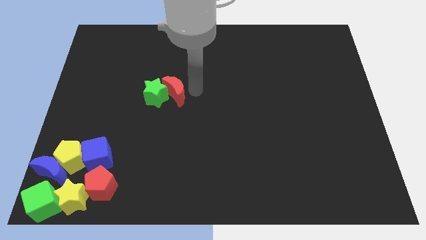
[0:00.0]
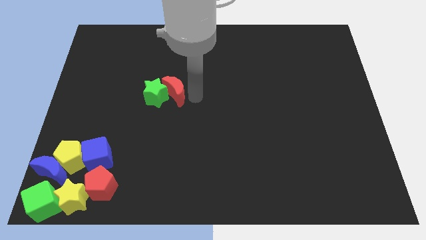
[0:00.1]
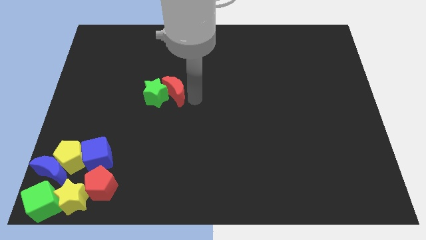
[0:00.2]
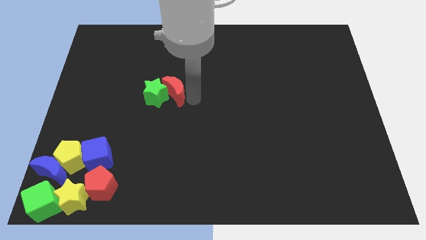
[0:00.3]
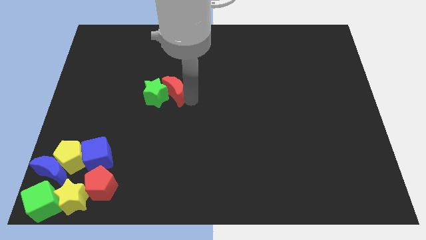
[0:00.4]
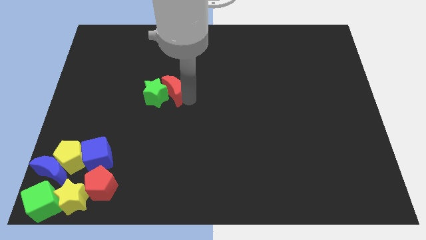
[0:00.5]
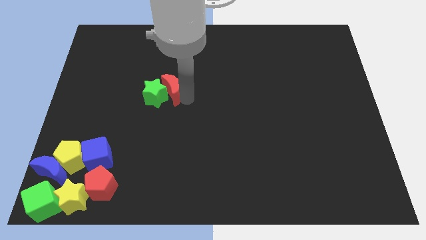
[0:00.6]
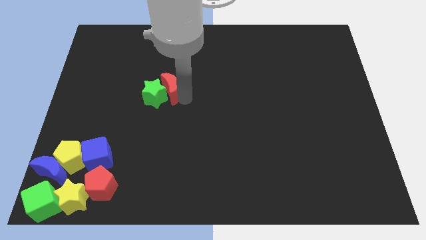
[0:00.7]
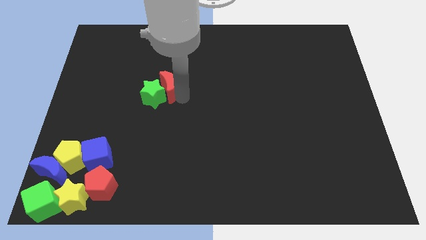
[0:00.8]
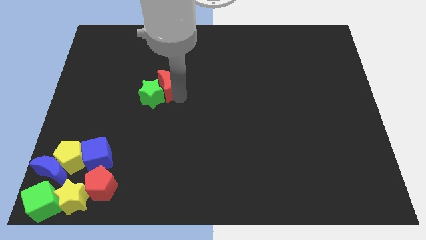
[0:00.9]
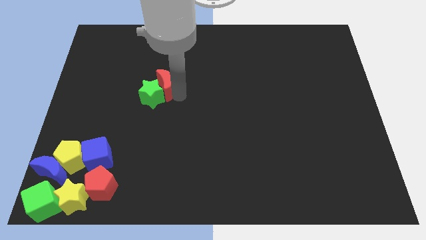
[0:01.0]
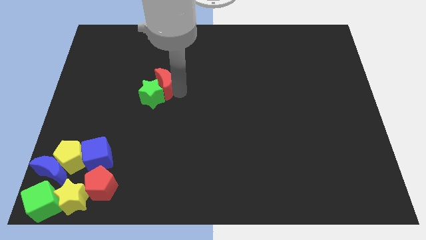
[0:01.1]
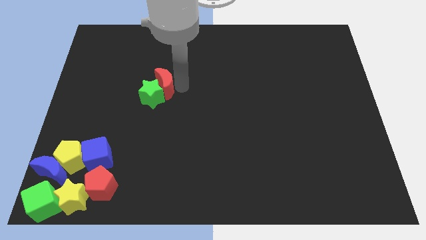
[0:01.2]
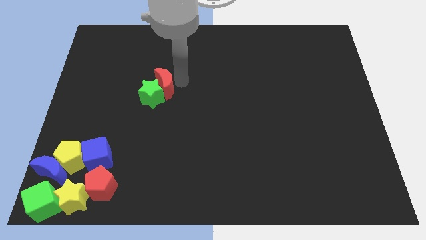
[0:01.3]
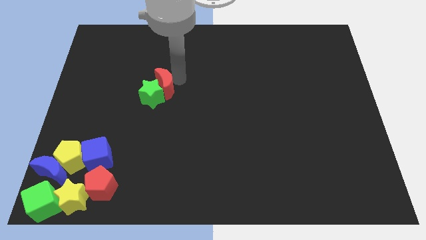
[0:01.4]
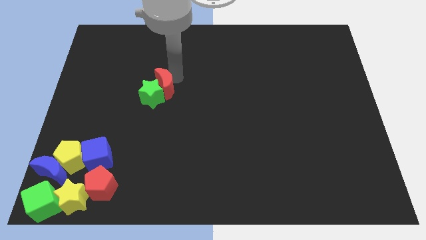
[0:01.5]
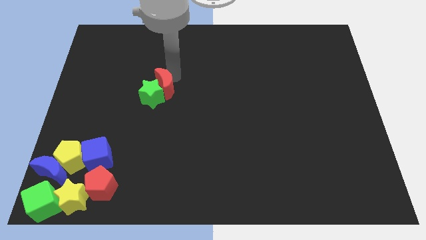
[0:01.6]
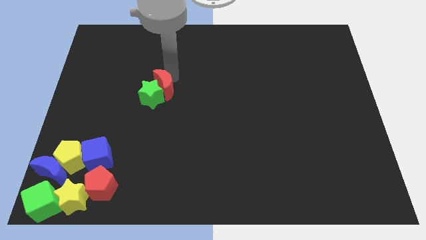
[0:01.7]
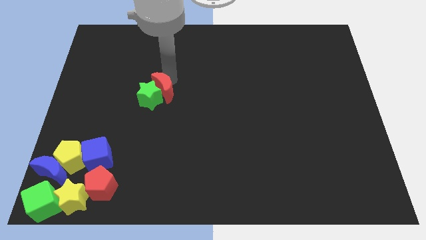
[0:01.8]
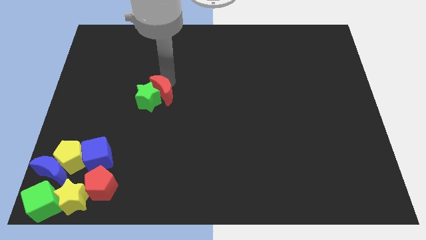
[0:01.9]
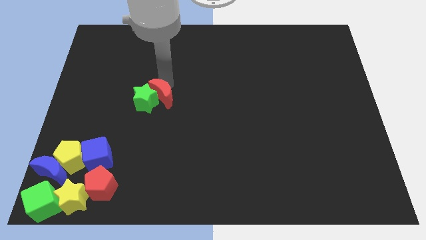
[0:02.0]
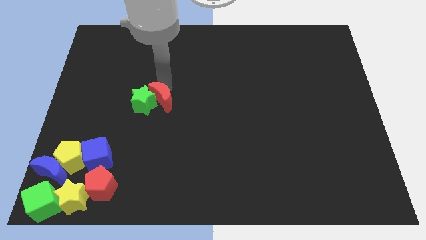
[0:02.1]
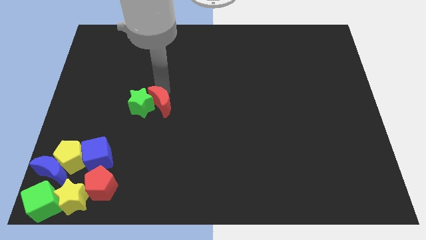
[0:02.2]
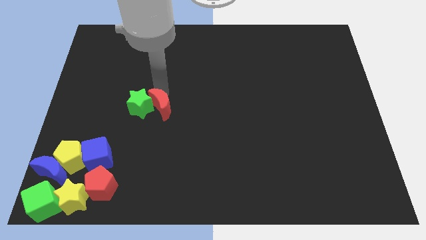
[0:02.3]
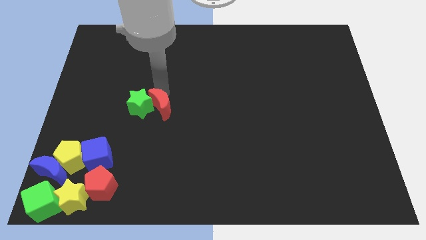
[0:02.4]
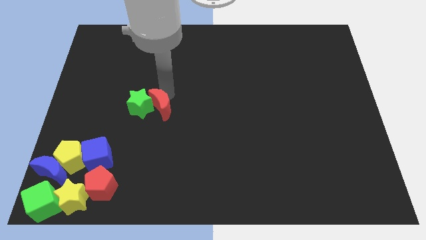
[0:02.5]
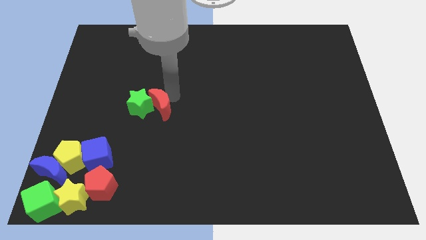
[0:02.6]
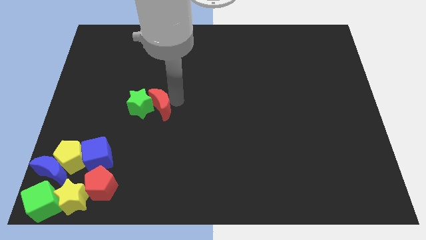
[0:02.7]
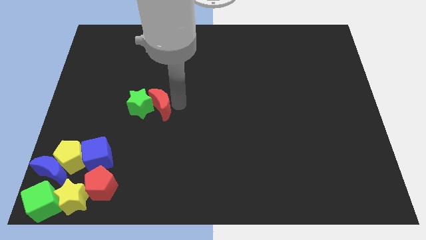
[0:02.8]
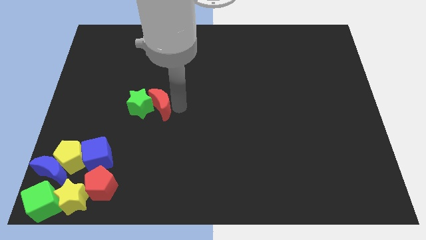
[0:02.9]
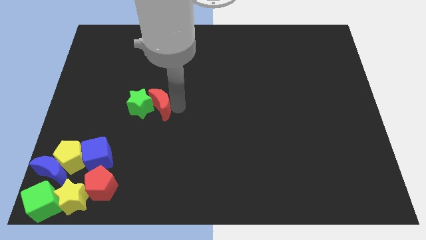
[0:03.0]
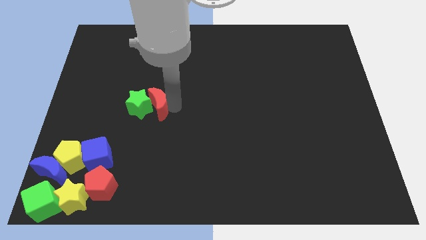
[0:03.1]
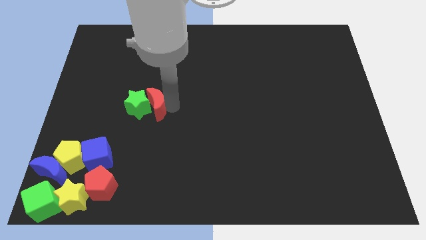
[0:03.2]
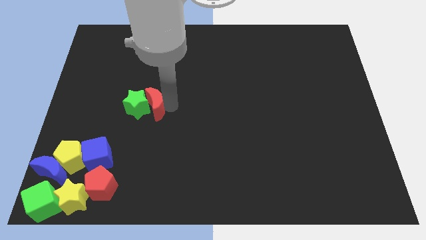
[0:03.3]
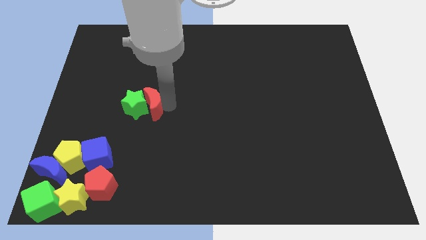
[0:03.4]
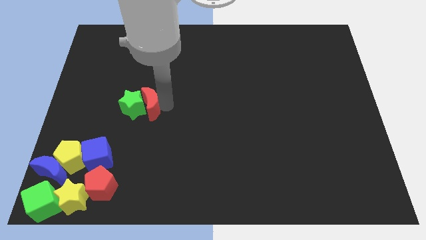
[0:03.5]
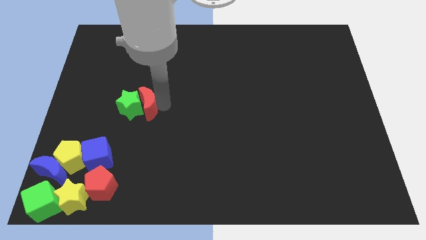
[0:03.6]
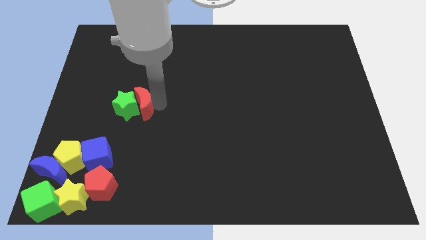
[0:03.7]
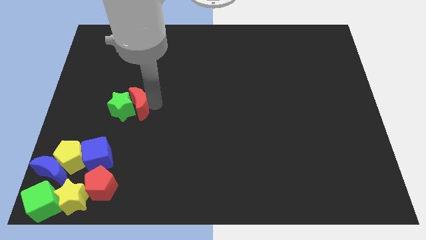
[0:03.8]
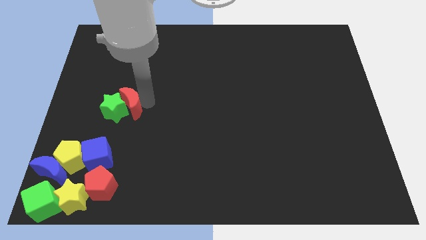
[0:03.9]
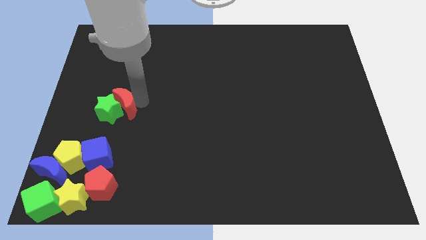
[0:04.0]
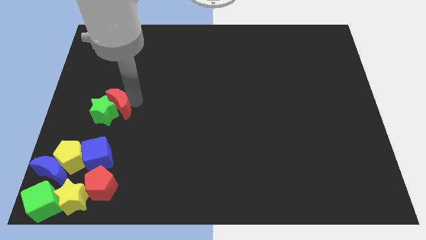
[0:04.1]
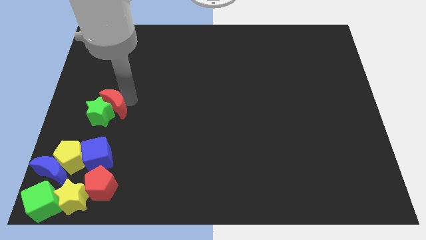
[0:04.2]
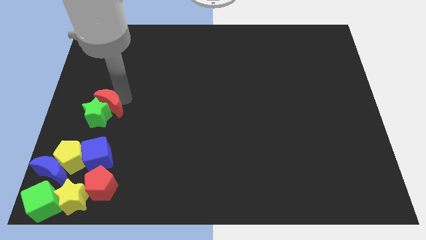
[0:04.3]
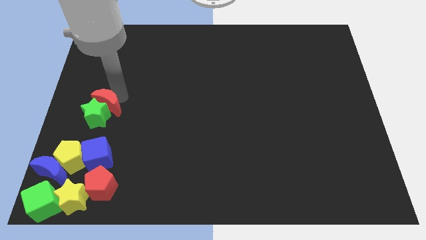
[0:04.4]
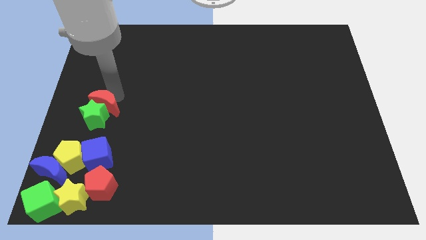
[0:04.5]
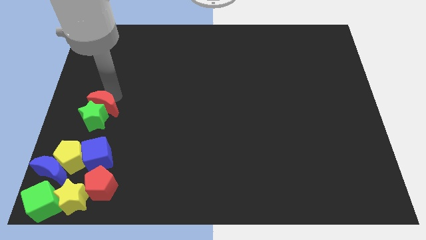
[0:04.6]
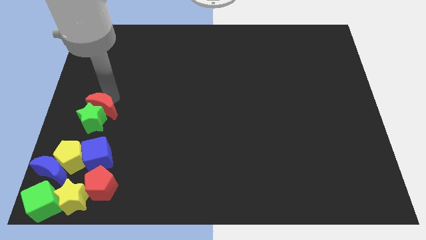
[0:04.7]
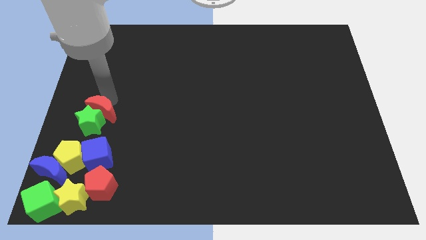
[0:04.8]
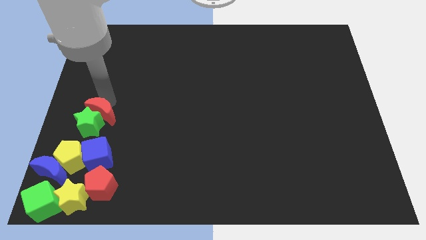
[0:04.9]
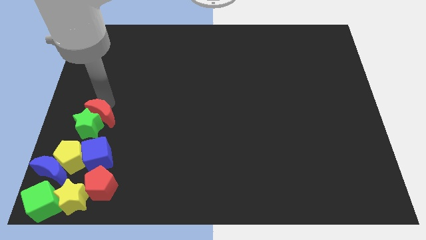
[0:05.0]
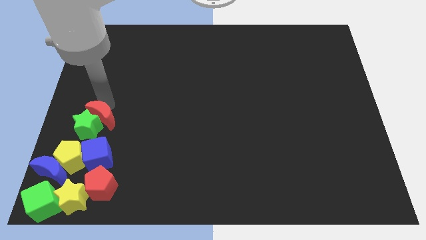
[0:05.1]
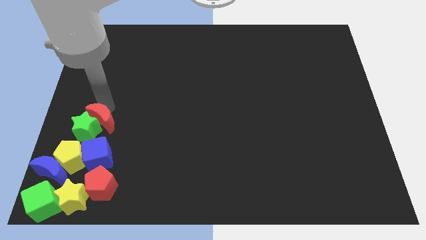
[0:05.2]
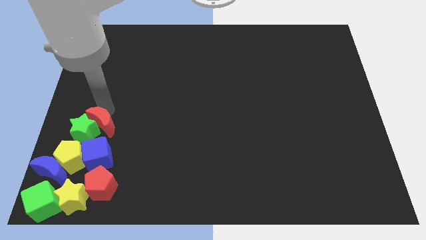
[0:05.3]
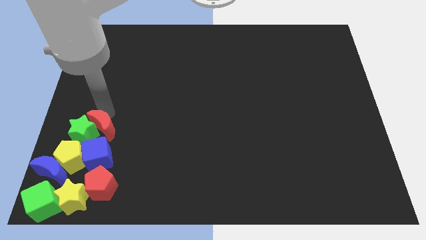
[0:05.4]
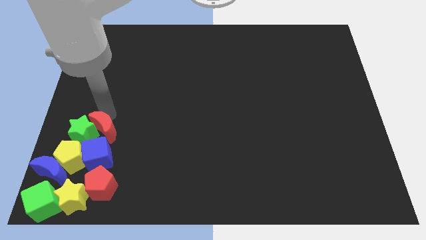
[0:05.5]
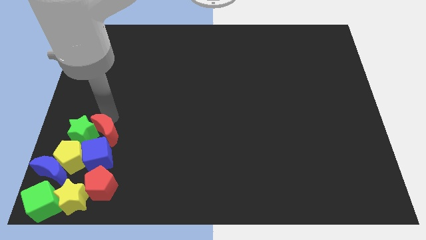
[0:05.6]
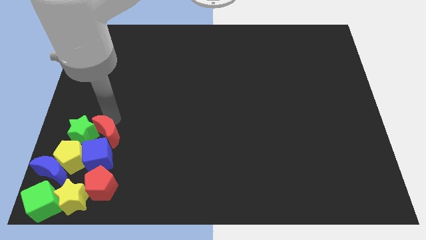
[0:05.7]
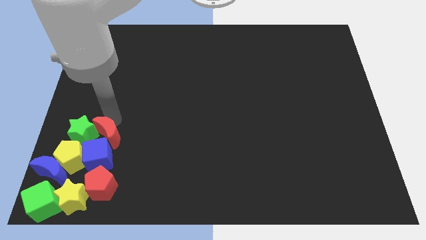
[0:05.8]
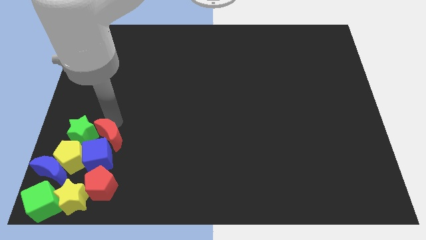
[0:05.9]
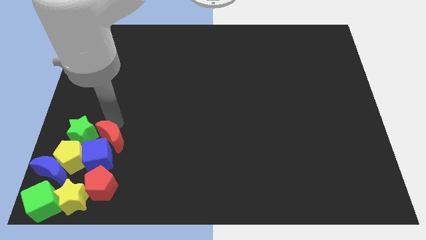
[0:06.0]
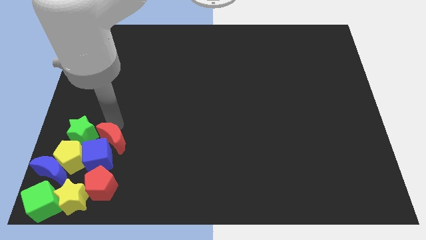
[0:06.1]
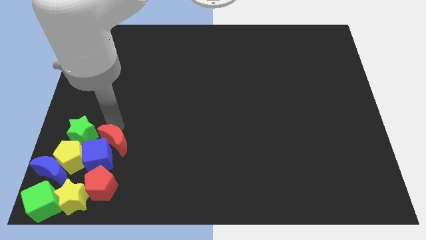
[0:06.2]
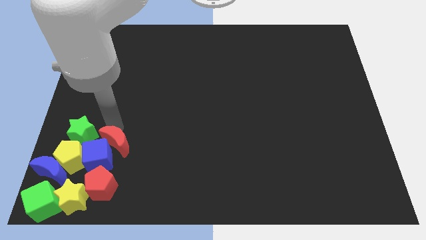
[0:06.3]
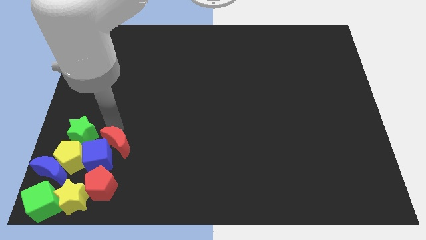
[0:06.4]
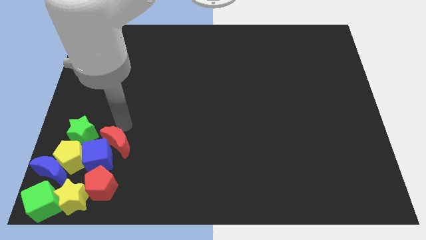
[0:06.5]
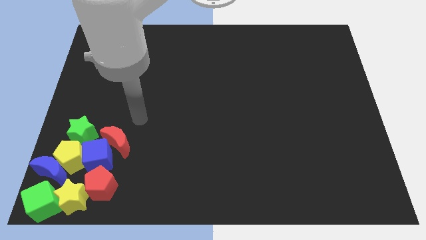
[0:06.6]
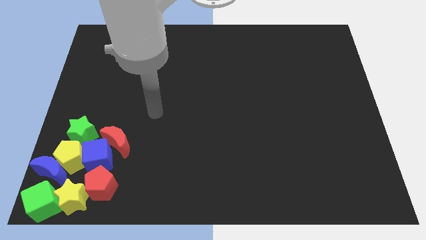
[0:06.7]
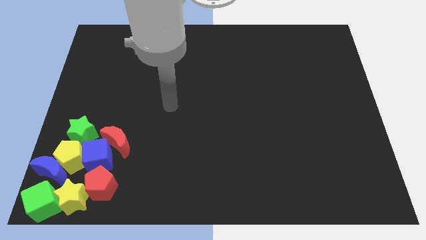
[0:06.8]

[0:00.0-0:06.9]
push the green star and red moon into the group of blocks

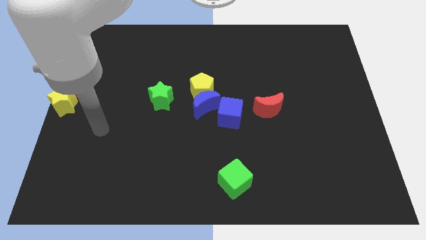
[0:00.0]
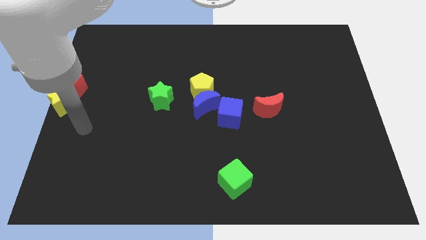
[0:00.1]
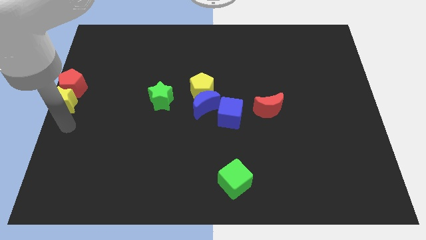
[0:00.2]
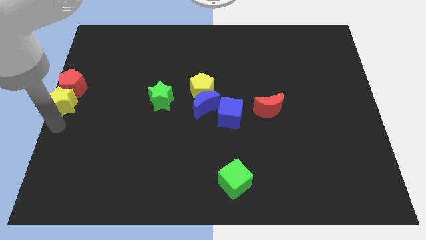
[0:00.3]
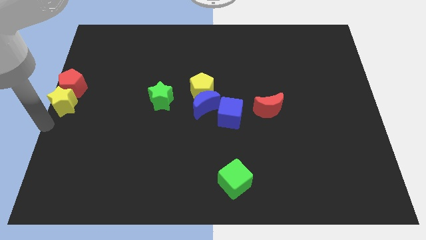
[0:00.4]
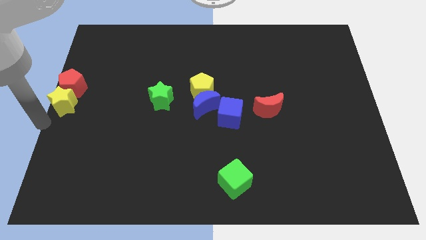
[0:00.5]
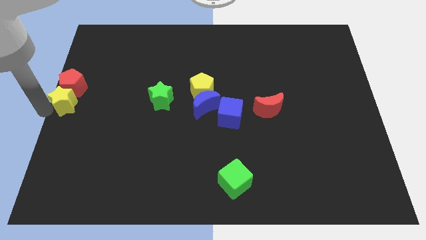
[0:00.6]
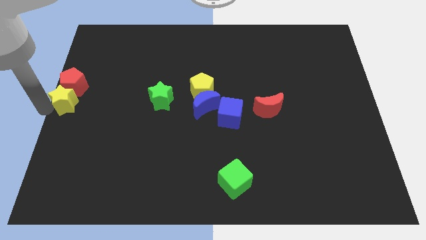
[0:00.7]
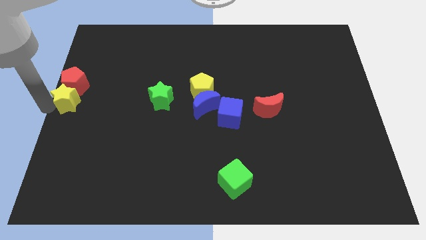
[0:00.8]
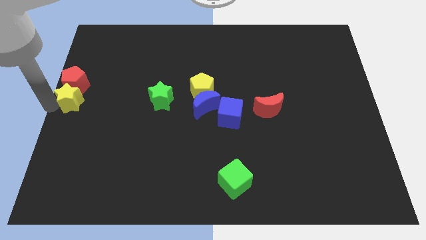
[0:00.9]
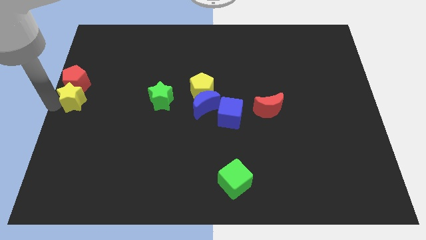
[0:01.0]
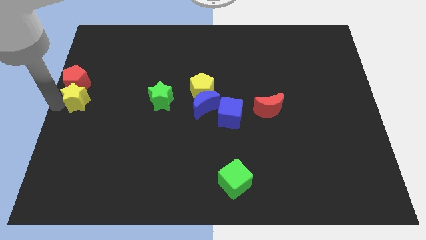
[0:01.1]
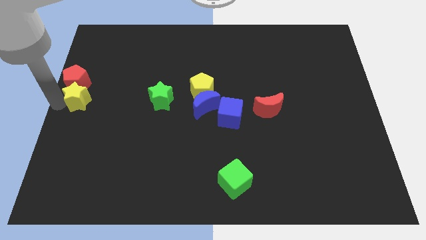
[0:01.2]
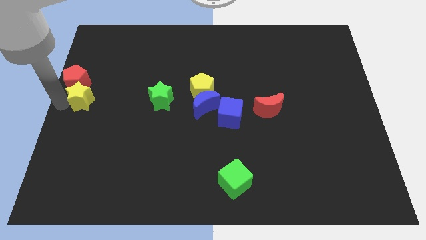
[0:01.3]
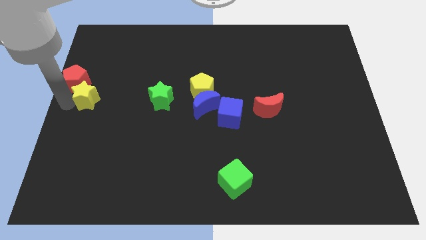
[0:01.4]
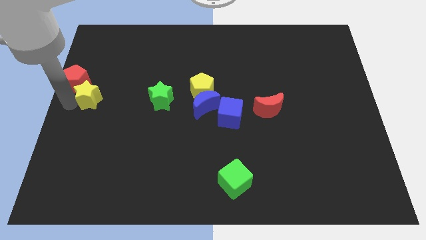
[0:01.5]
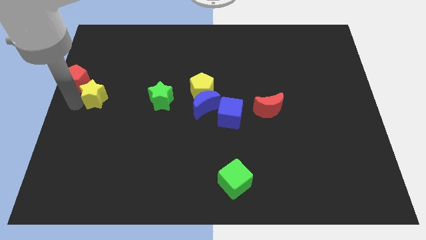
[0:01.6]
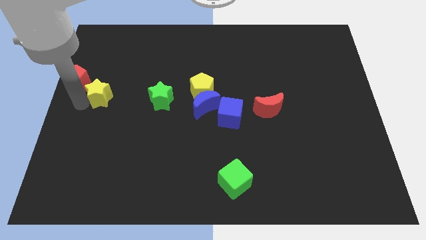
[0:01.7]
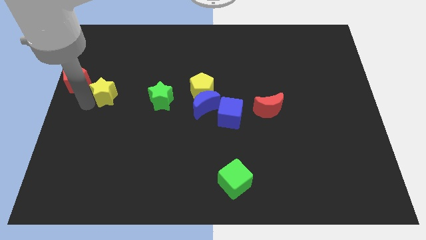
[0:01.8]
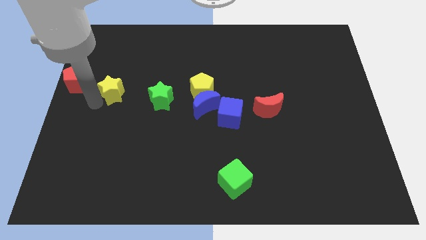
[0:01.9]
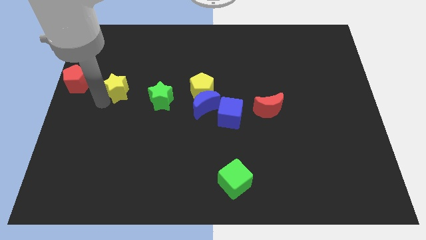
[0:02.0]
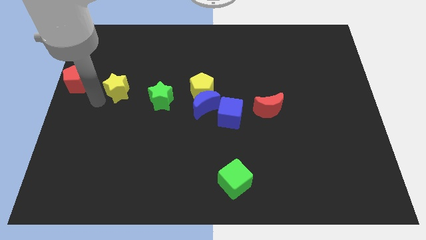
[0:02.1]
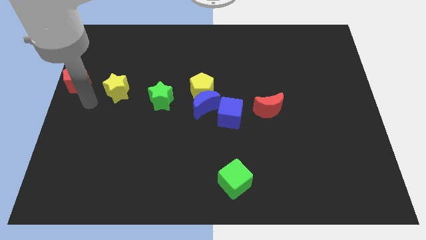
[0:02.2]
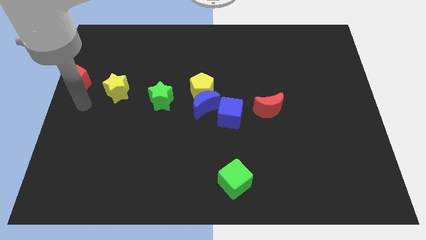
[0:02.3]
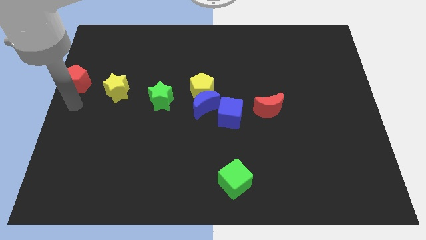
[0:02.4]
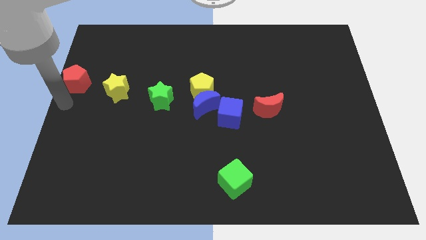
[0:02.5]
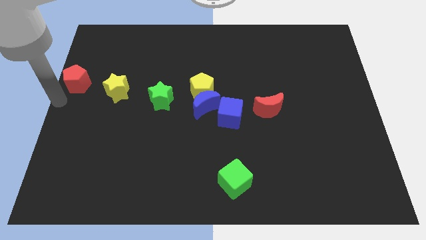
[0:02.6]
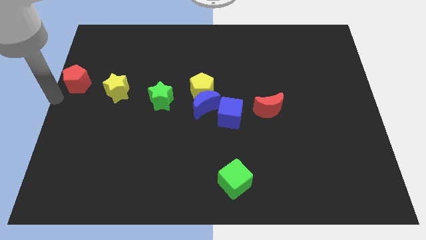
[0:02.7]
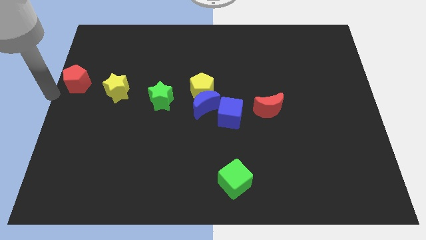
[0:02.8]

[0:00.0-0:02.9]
move the yellow star to the right of the red pentagon
